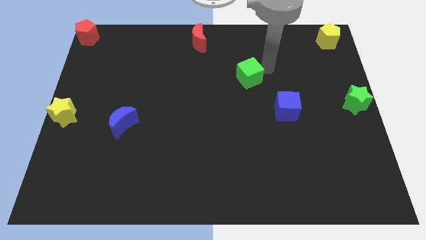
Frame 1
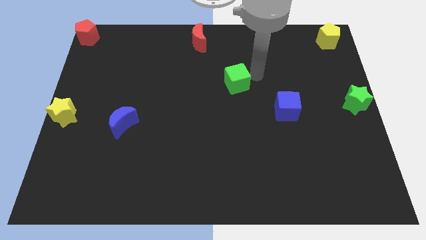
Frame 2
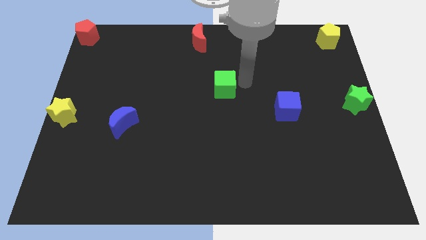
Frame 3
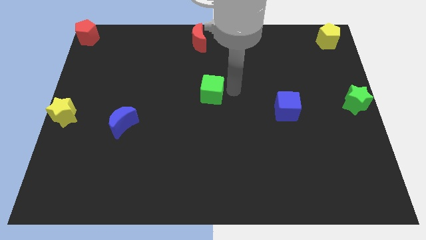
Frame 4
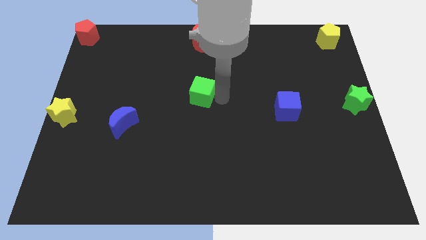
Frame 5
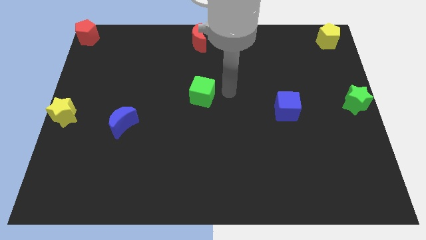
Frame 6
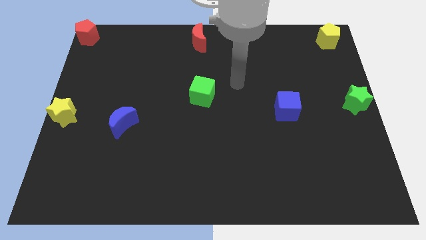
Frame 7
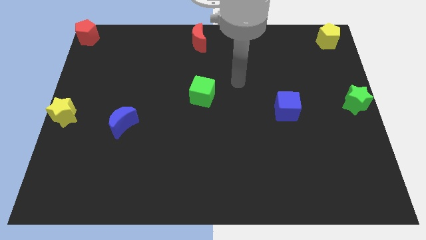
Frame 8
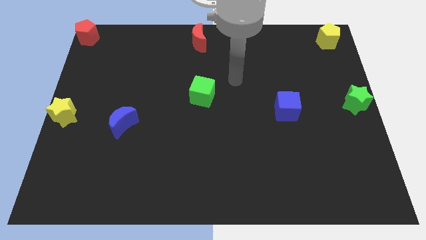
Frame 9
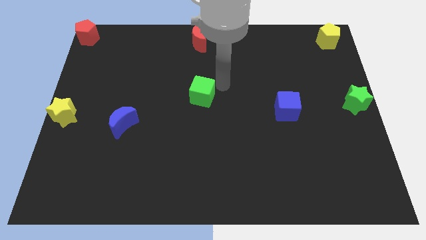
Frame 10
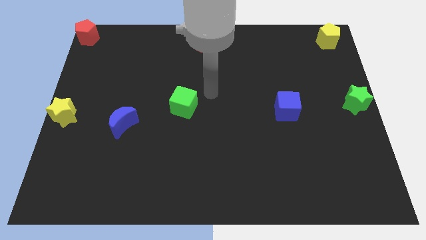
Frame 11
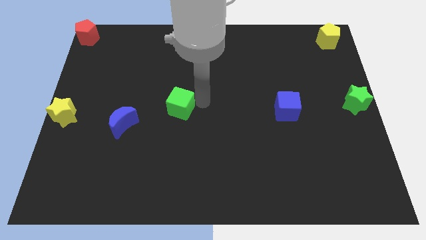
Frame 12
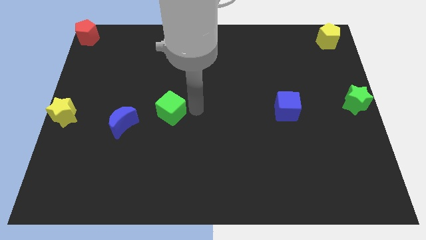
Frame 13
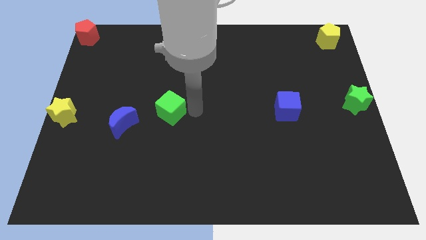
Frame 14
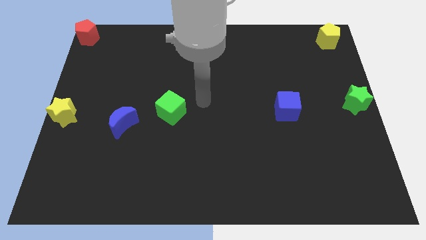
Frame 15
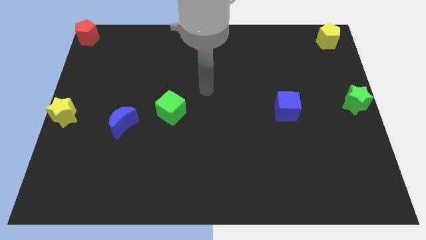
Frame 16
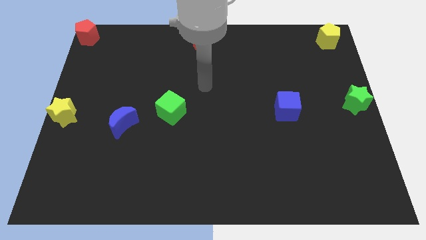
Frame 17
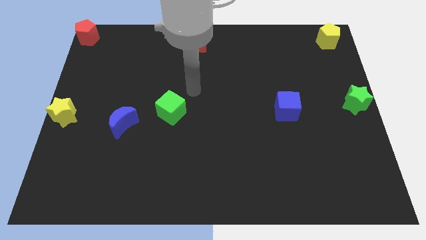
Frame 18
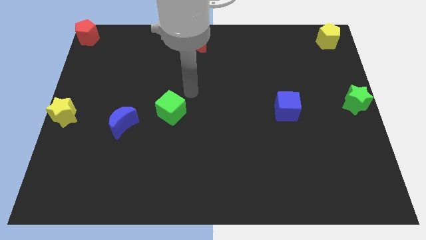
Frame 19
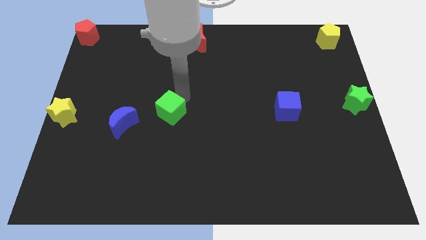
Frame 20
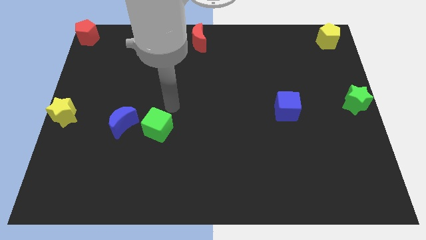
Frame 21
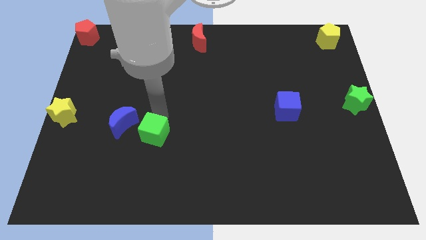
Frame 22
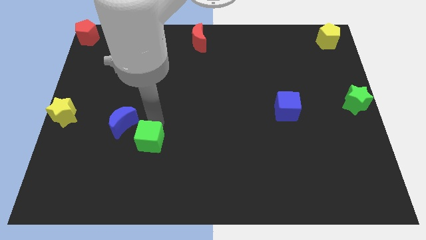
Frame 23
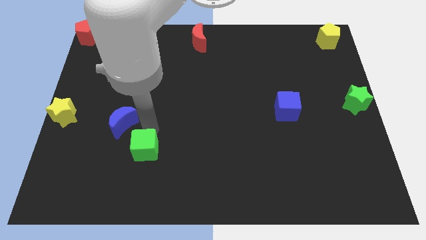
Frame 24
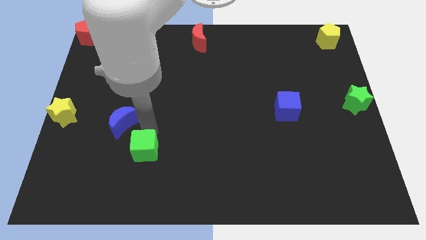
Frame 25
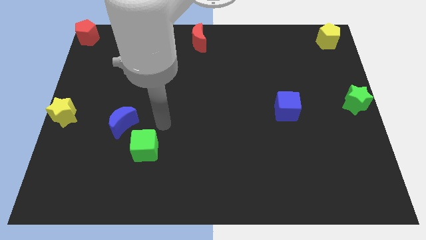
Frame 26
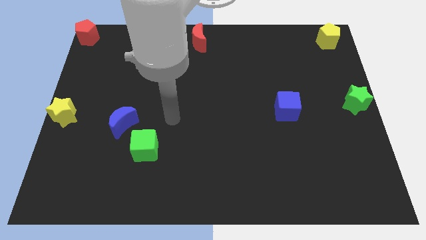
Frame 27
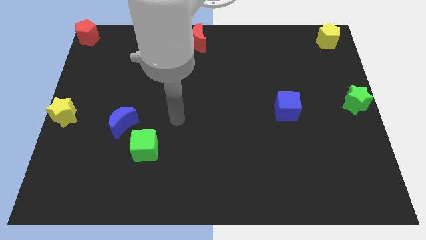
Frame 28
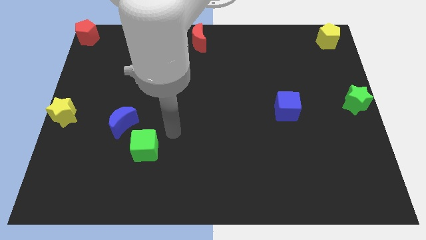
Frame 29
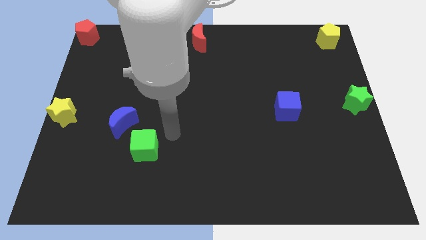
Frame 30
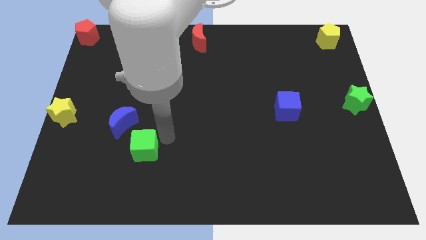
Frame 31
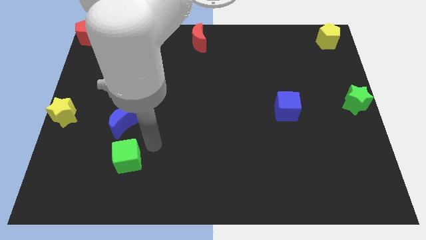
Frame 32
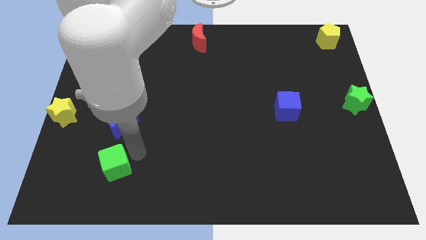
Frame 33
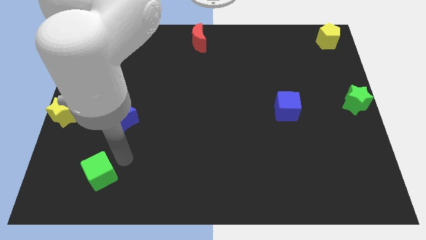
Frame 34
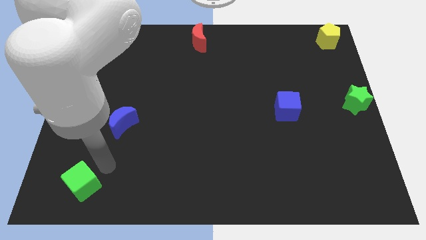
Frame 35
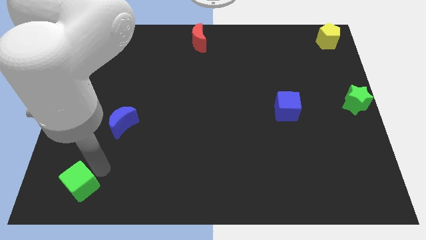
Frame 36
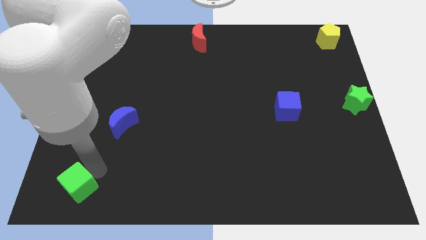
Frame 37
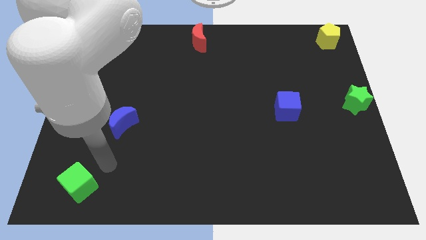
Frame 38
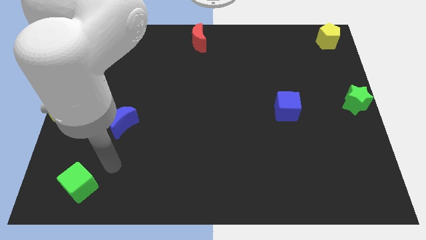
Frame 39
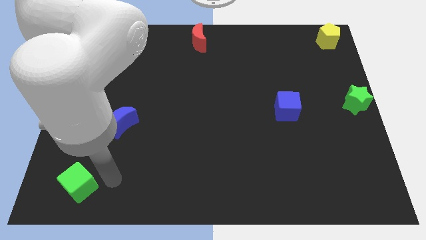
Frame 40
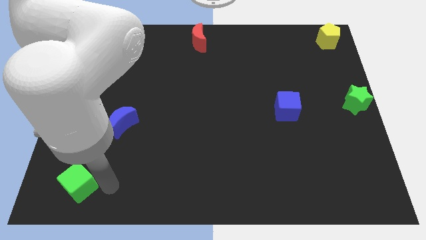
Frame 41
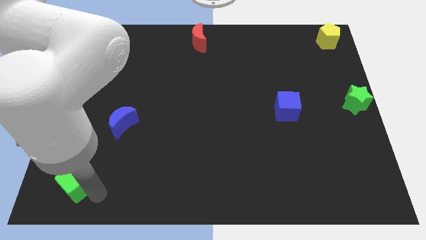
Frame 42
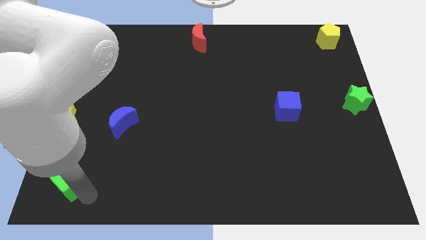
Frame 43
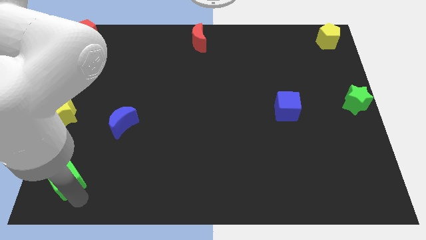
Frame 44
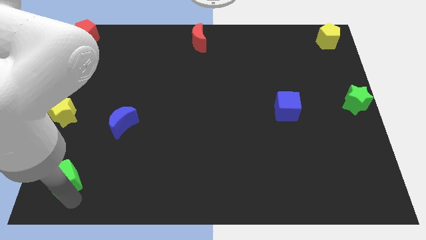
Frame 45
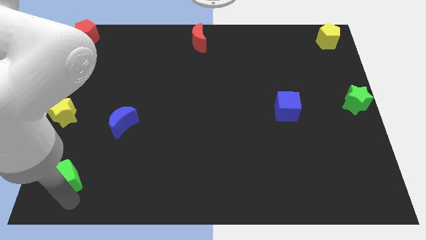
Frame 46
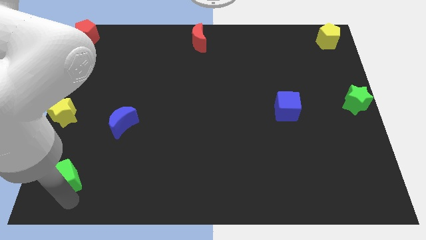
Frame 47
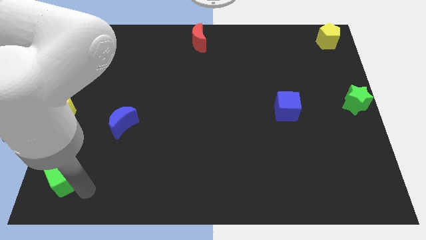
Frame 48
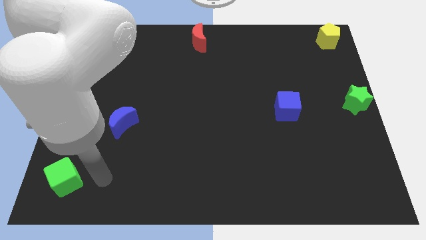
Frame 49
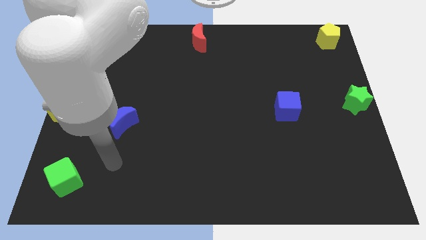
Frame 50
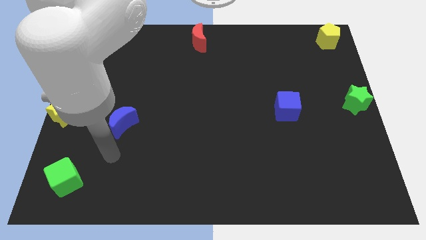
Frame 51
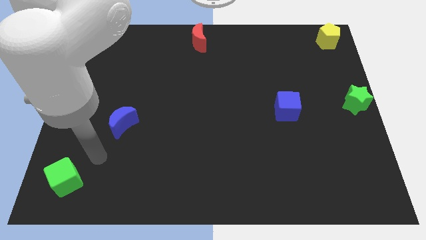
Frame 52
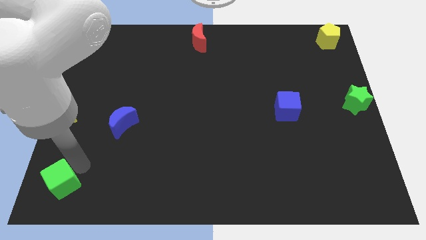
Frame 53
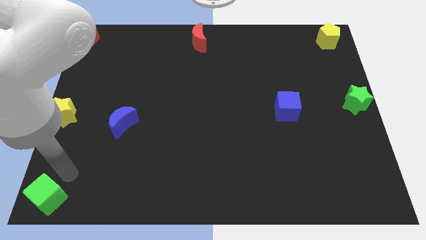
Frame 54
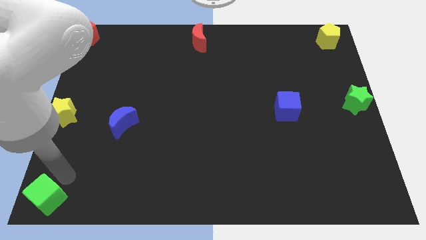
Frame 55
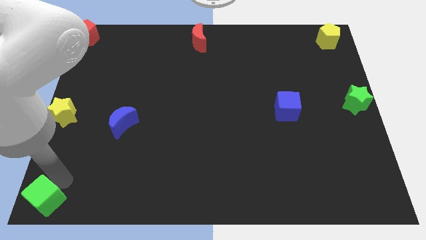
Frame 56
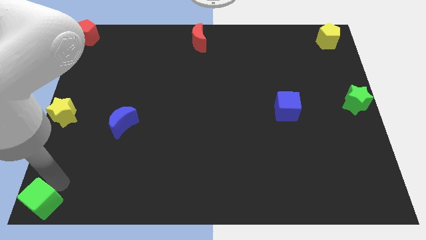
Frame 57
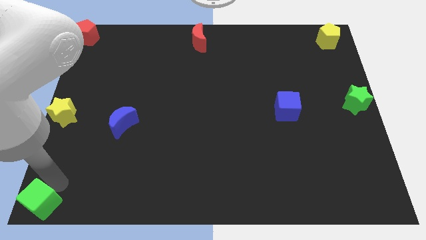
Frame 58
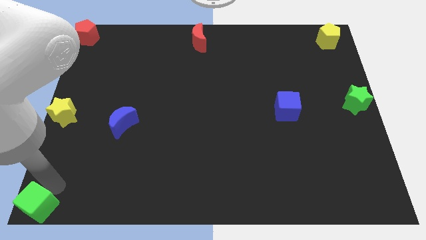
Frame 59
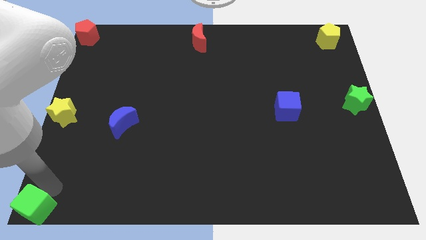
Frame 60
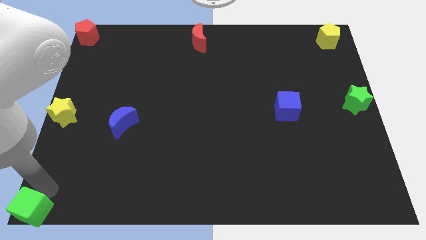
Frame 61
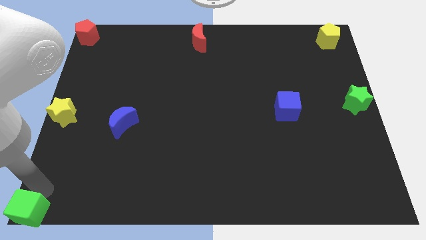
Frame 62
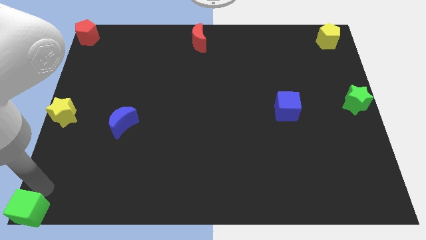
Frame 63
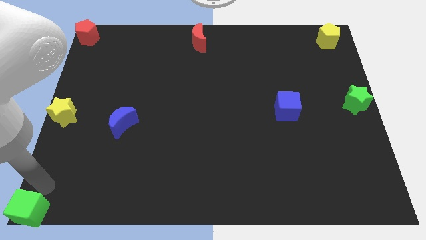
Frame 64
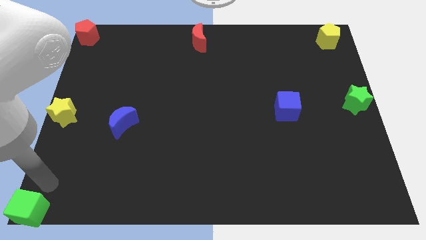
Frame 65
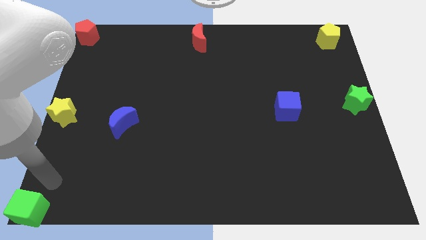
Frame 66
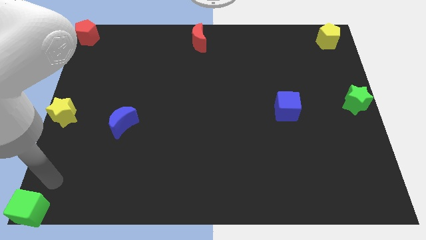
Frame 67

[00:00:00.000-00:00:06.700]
move the green cube to the bottom left corner

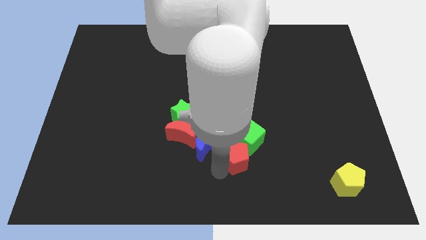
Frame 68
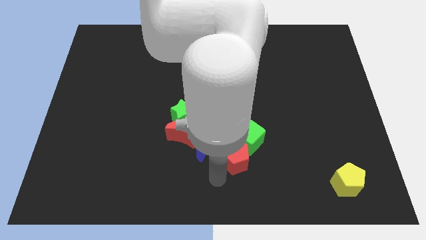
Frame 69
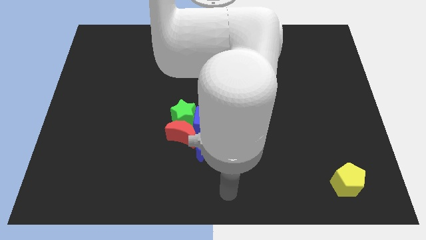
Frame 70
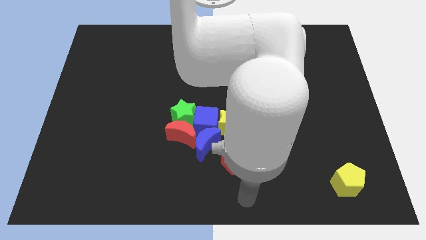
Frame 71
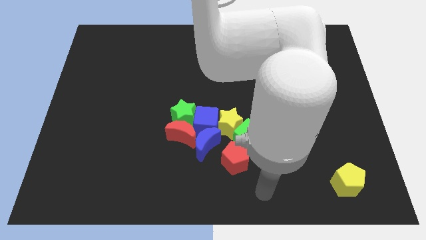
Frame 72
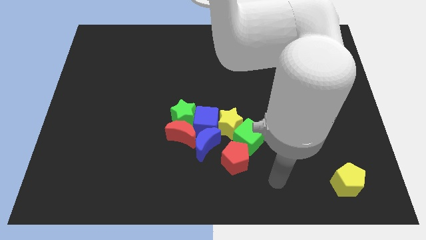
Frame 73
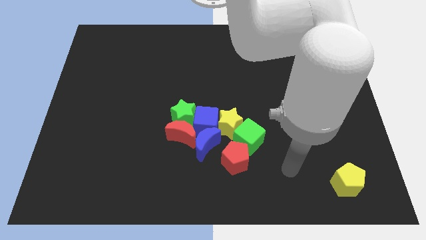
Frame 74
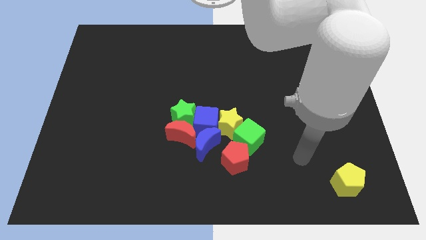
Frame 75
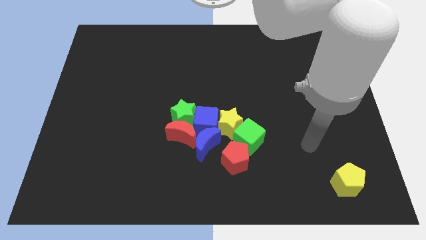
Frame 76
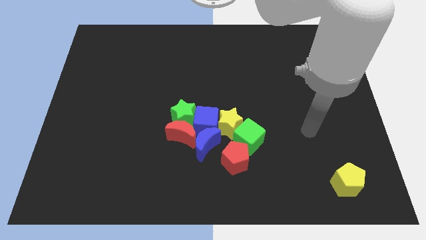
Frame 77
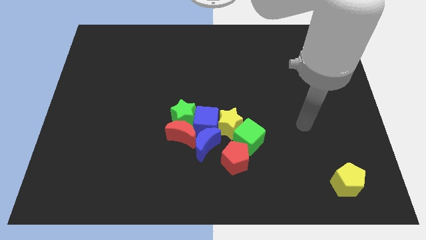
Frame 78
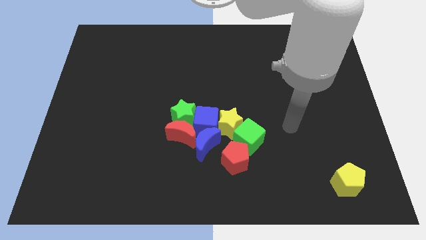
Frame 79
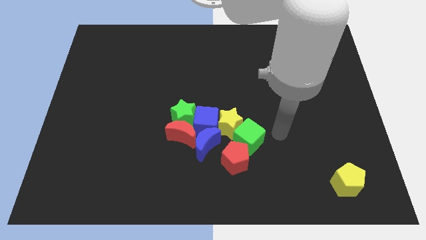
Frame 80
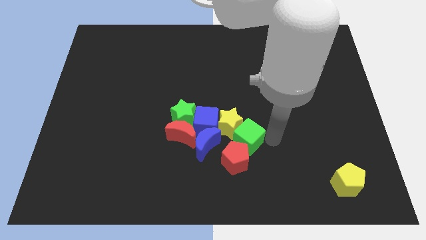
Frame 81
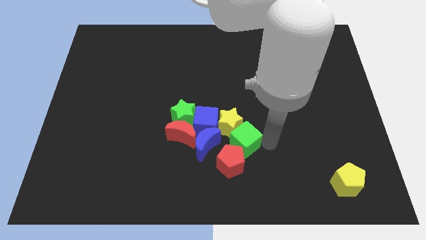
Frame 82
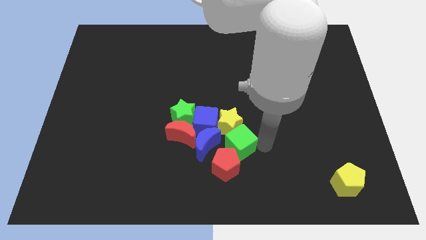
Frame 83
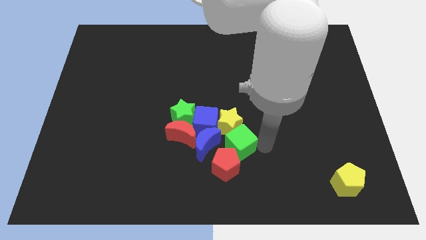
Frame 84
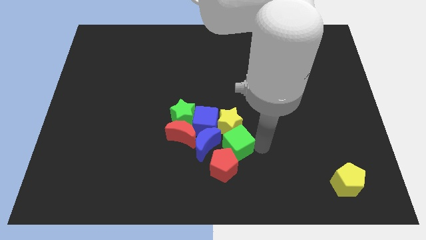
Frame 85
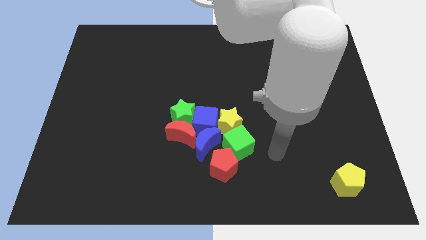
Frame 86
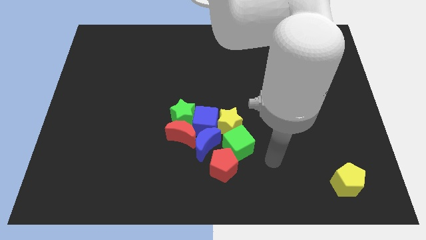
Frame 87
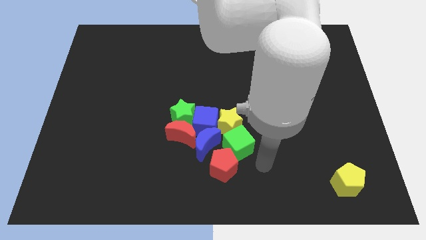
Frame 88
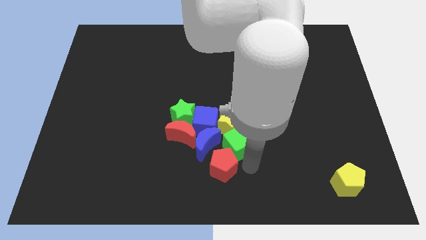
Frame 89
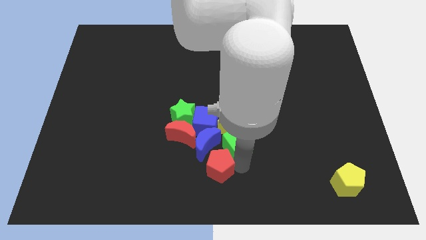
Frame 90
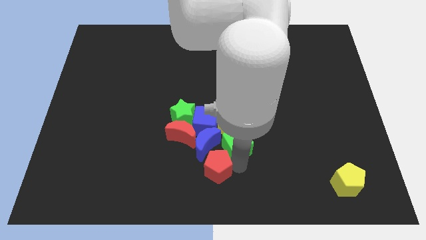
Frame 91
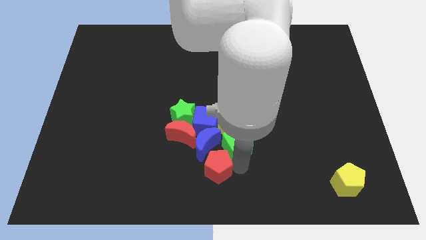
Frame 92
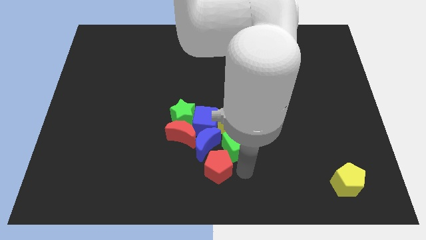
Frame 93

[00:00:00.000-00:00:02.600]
push the arm into green cube
